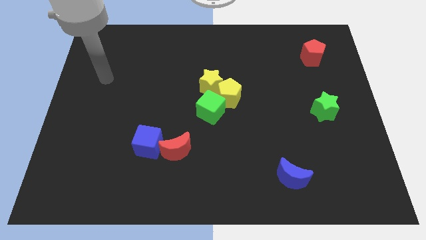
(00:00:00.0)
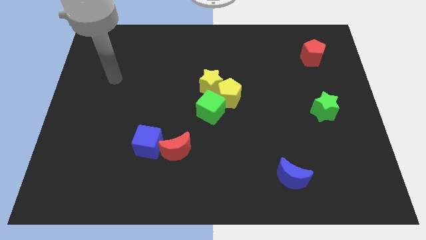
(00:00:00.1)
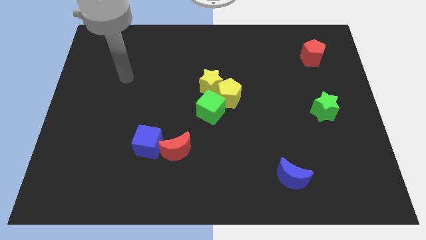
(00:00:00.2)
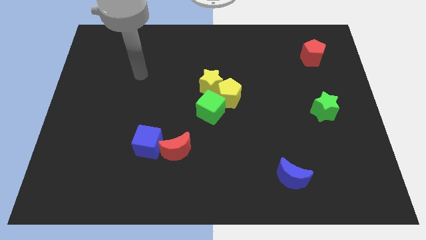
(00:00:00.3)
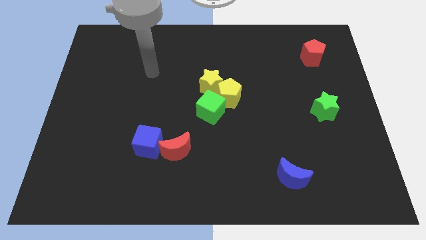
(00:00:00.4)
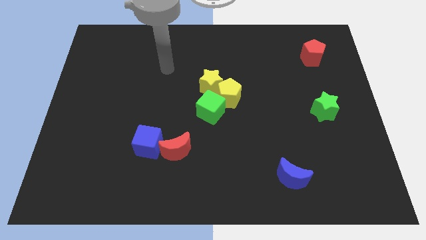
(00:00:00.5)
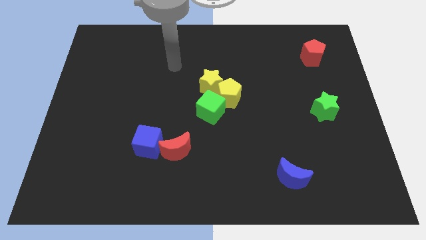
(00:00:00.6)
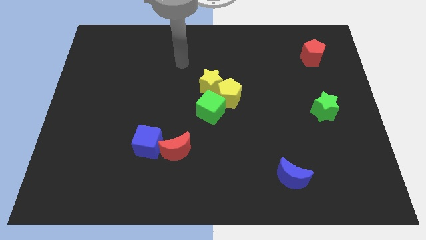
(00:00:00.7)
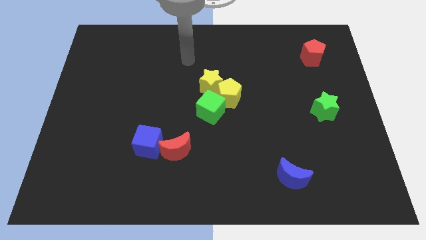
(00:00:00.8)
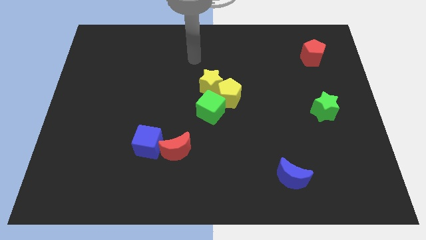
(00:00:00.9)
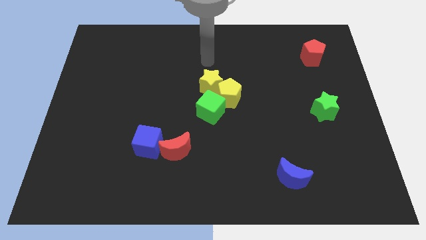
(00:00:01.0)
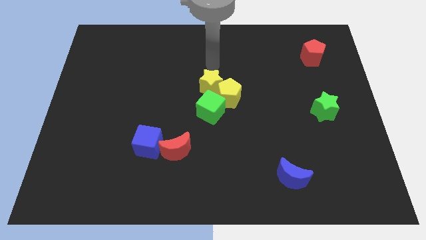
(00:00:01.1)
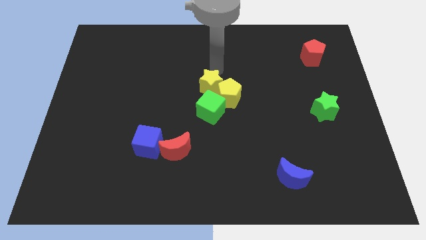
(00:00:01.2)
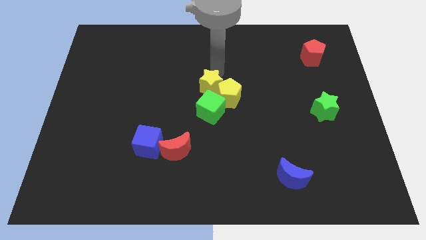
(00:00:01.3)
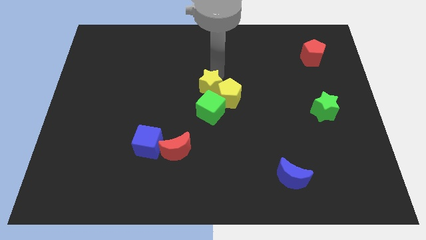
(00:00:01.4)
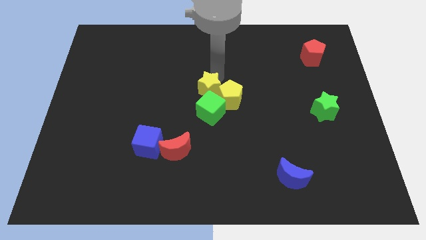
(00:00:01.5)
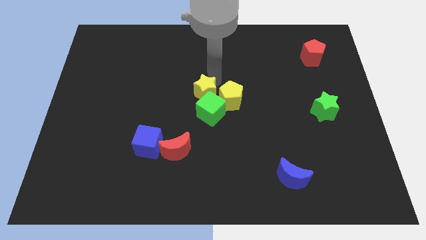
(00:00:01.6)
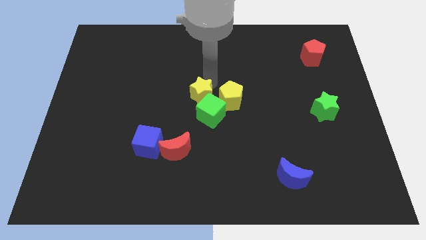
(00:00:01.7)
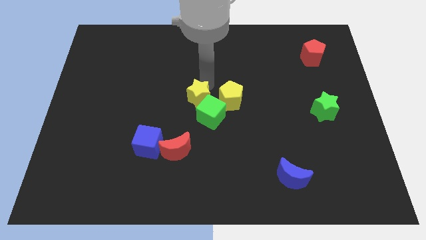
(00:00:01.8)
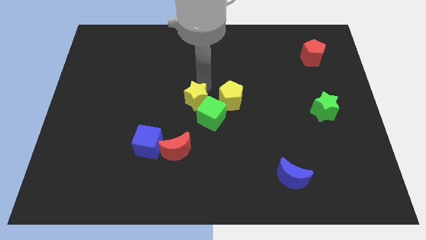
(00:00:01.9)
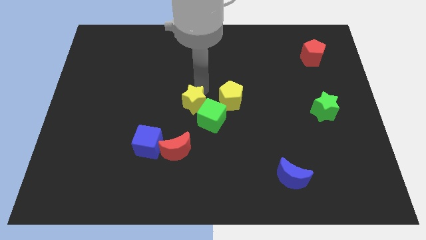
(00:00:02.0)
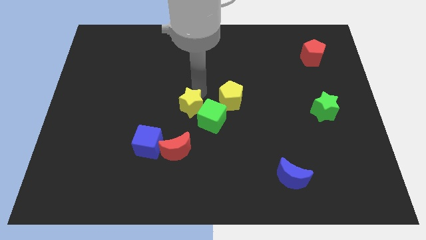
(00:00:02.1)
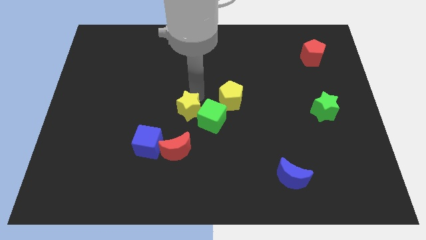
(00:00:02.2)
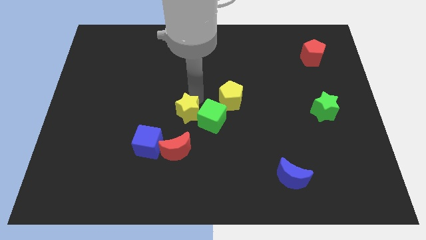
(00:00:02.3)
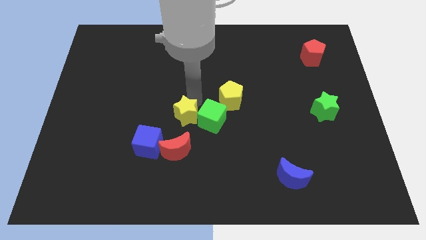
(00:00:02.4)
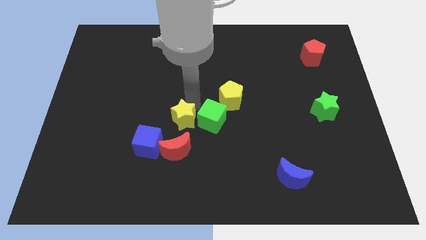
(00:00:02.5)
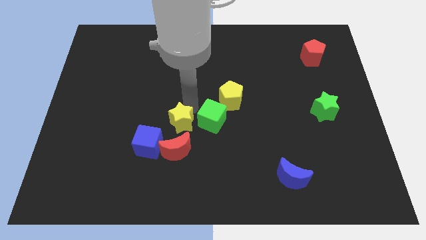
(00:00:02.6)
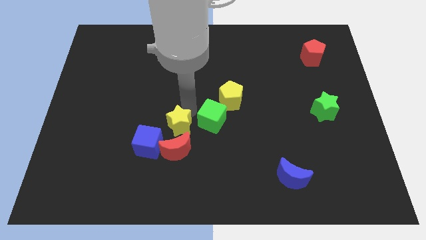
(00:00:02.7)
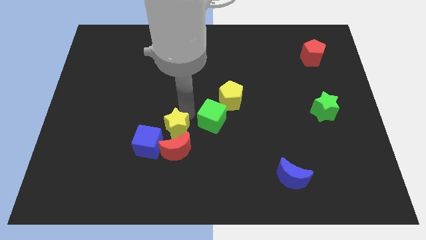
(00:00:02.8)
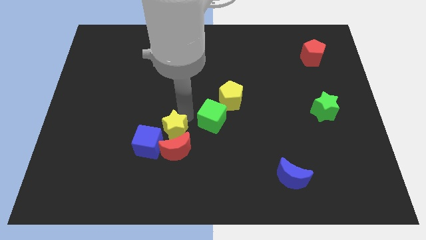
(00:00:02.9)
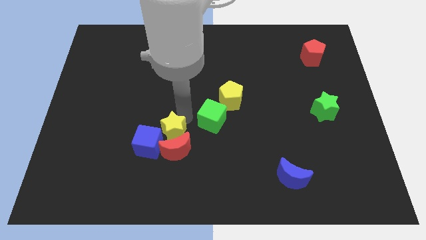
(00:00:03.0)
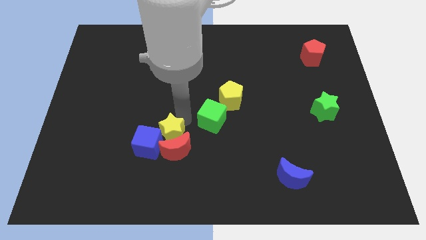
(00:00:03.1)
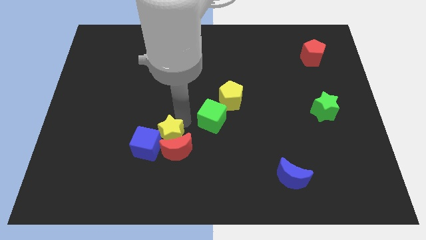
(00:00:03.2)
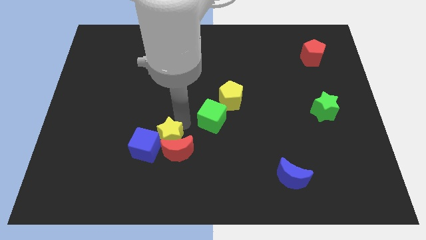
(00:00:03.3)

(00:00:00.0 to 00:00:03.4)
slide the yellow star close to the blue cube

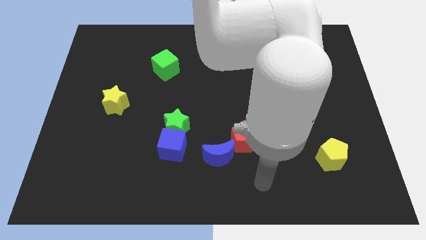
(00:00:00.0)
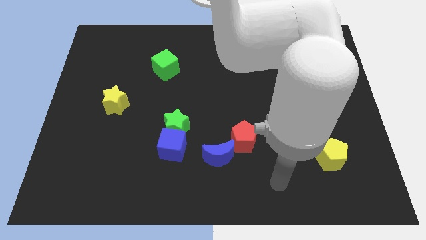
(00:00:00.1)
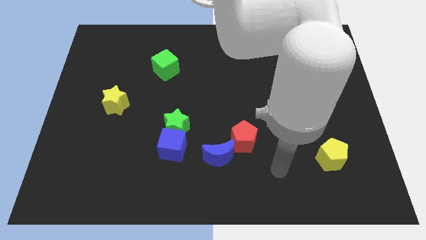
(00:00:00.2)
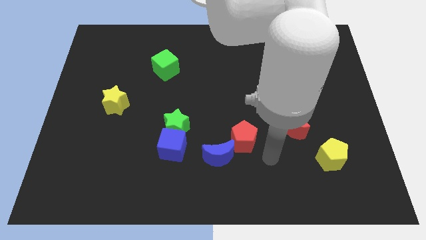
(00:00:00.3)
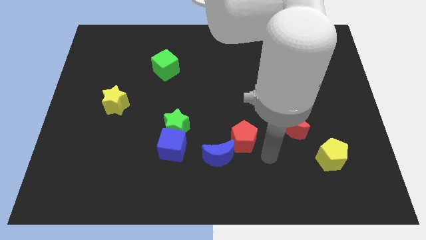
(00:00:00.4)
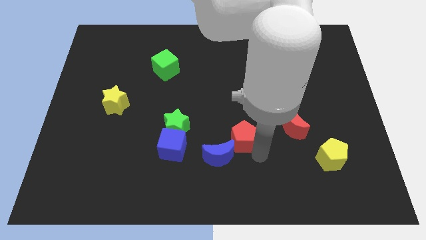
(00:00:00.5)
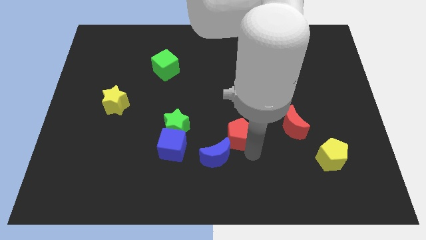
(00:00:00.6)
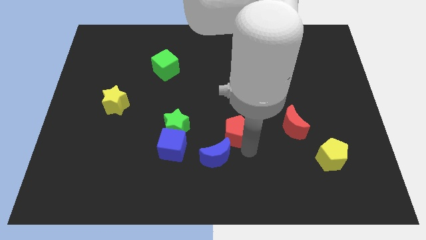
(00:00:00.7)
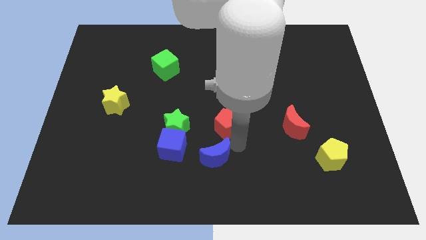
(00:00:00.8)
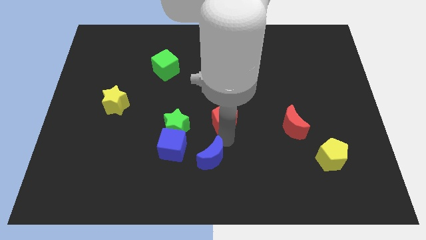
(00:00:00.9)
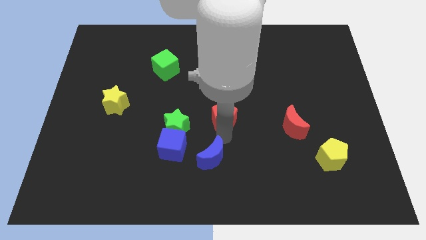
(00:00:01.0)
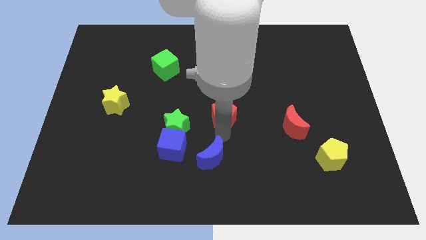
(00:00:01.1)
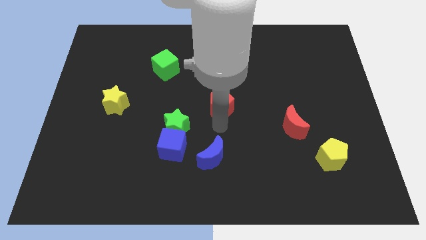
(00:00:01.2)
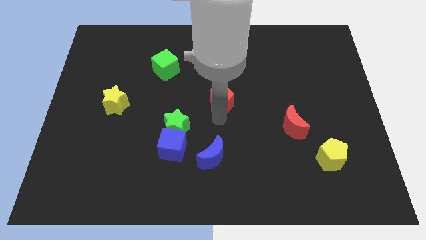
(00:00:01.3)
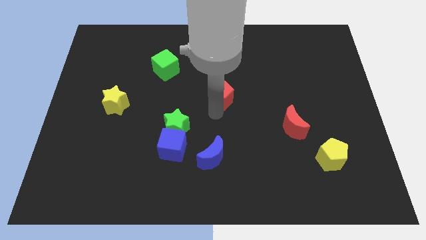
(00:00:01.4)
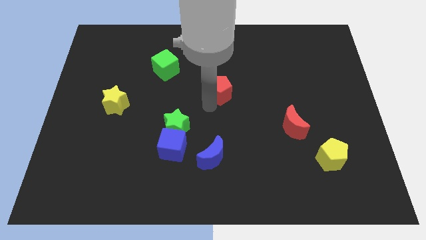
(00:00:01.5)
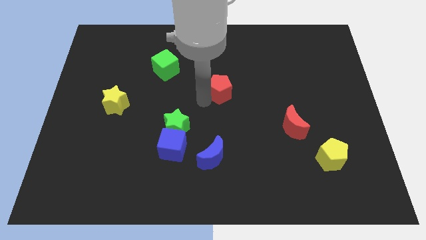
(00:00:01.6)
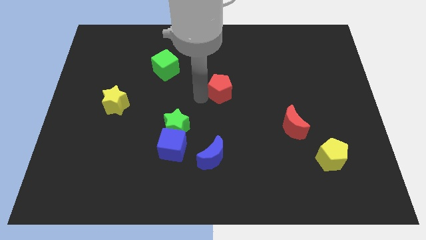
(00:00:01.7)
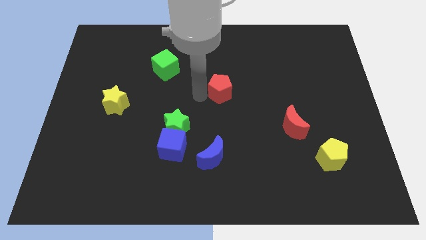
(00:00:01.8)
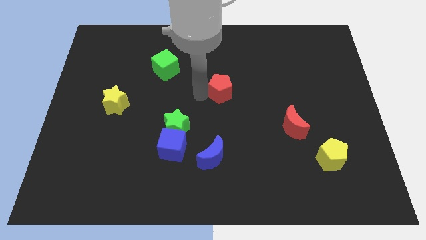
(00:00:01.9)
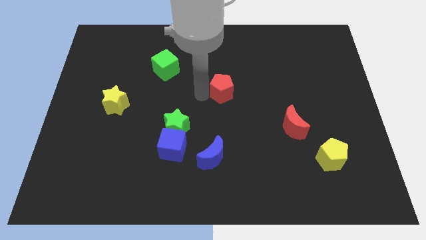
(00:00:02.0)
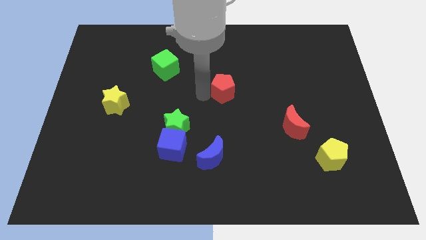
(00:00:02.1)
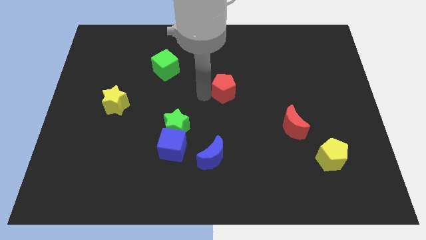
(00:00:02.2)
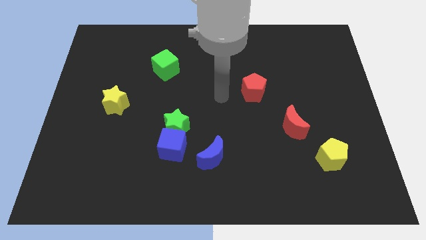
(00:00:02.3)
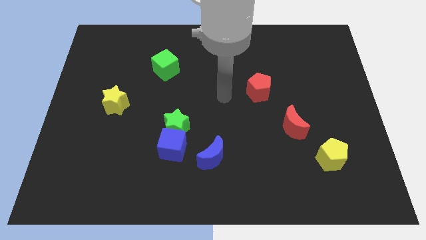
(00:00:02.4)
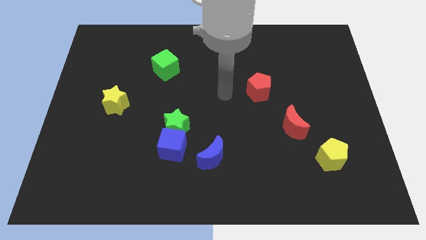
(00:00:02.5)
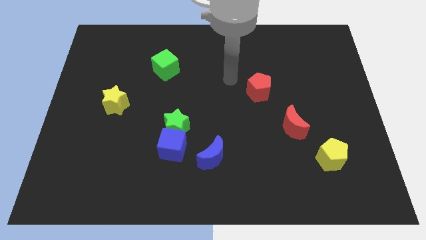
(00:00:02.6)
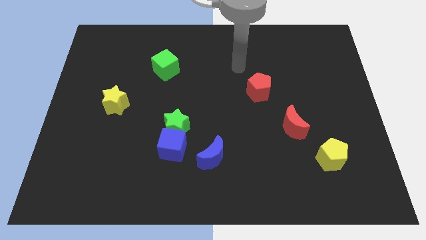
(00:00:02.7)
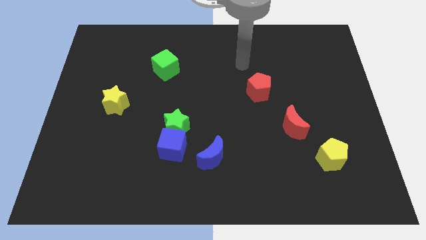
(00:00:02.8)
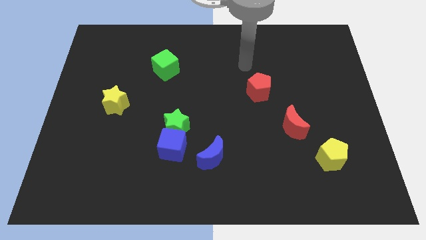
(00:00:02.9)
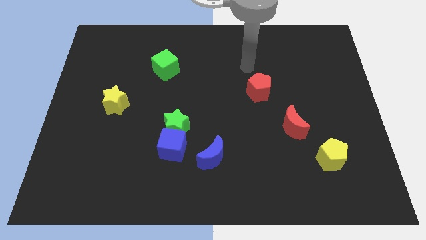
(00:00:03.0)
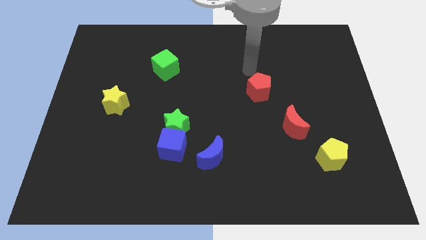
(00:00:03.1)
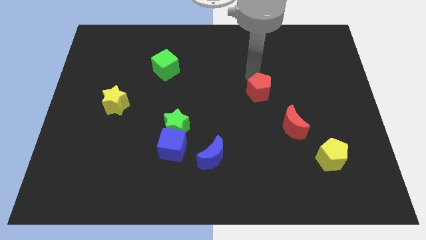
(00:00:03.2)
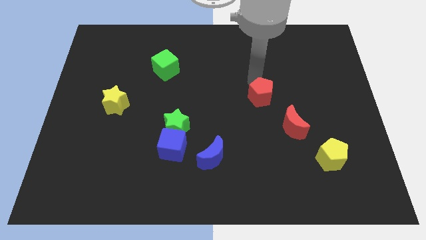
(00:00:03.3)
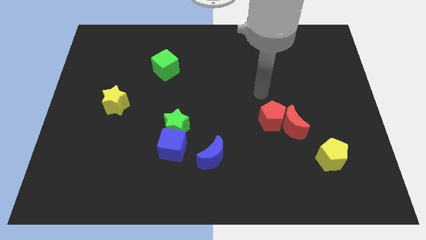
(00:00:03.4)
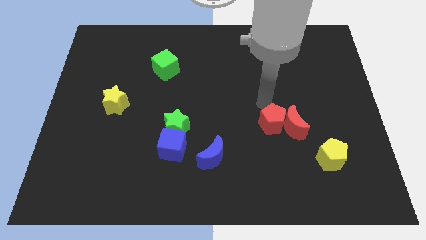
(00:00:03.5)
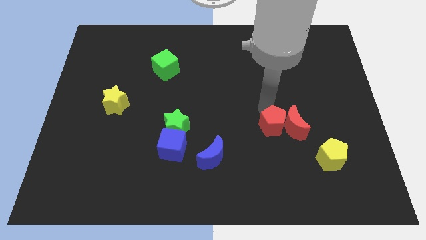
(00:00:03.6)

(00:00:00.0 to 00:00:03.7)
move the red pentagon next to the red moon

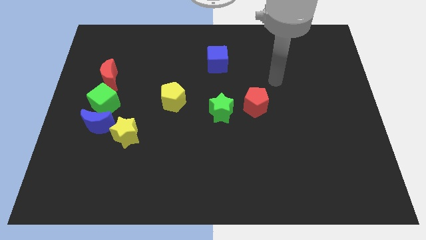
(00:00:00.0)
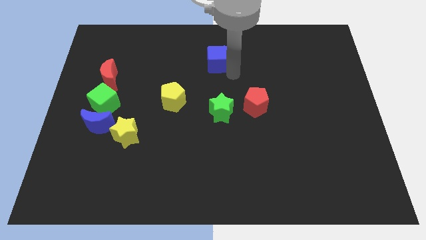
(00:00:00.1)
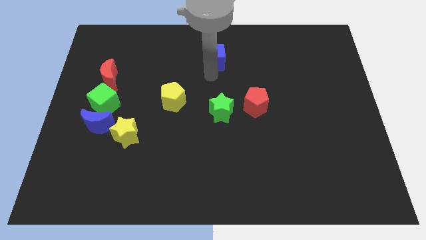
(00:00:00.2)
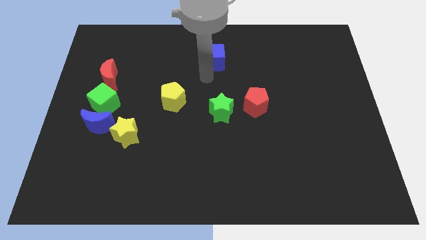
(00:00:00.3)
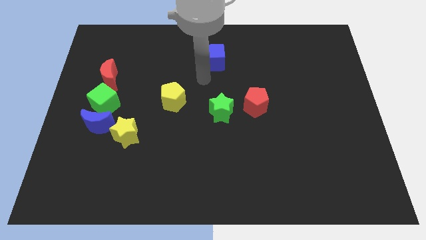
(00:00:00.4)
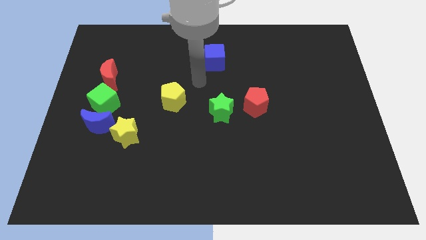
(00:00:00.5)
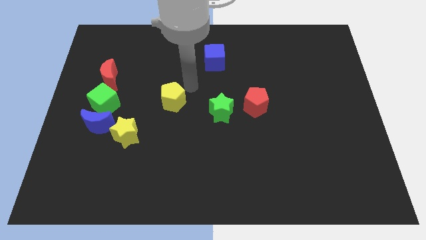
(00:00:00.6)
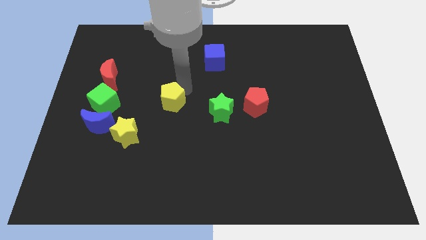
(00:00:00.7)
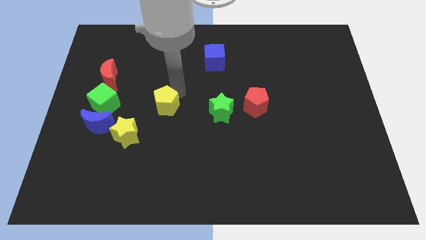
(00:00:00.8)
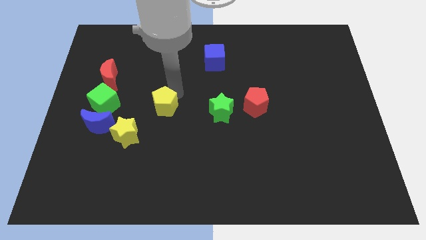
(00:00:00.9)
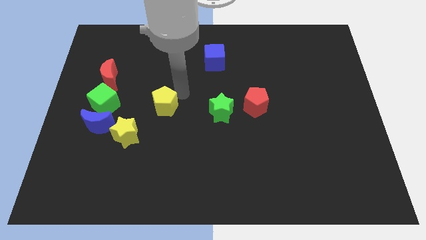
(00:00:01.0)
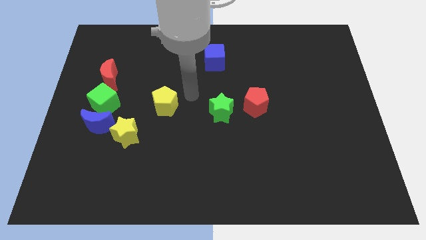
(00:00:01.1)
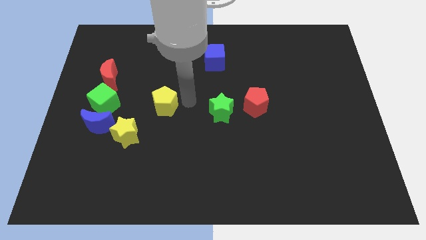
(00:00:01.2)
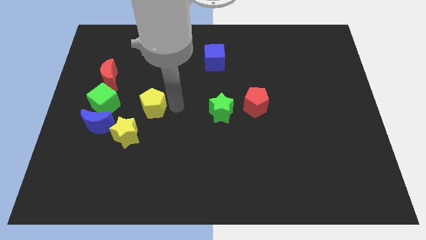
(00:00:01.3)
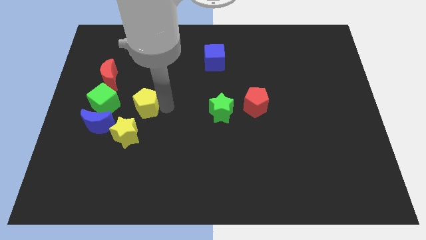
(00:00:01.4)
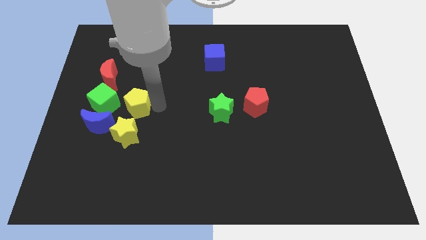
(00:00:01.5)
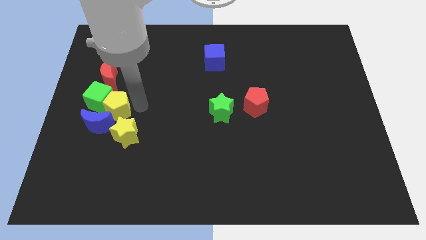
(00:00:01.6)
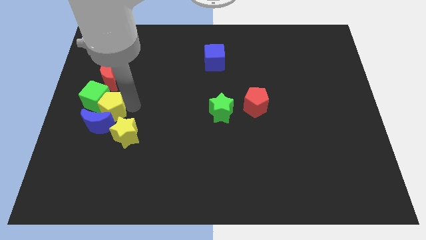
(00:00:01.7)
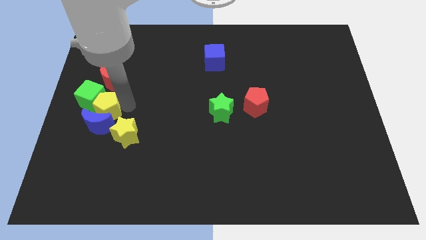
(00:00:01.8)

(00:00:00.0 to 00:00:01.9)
put the yellow pentagon close to the blue moon
